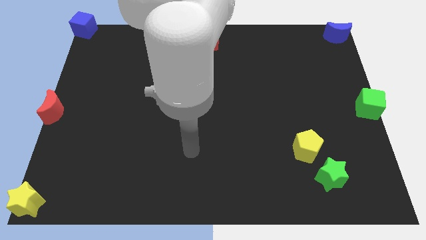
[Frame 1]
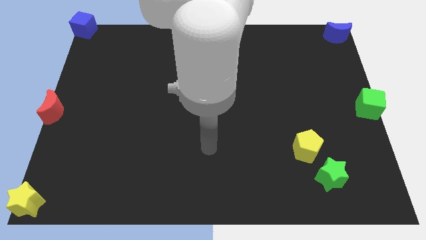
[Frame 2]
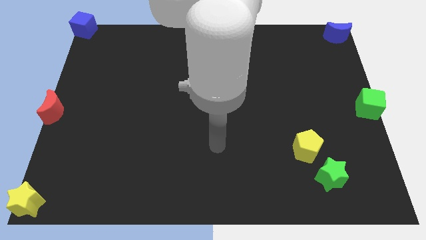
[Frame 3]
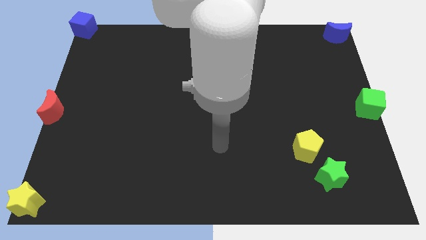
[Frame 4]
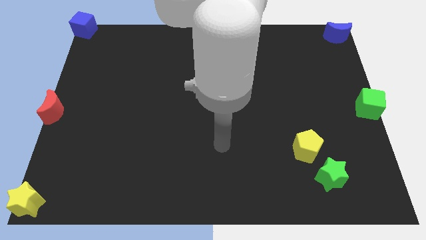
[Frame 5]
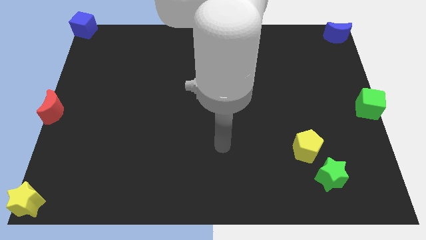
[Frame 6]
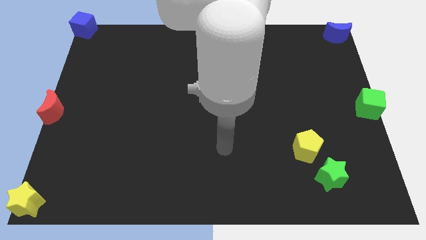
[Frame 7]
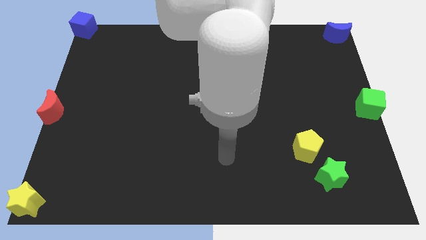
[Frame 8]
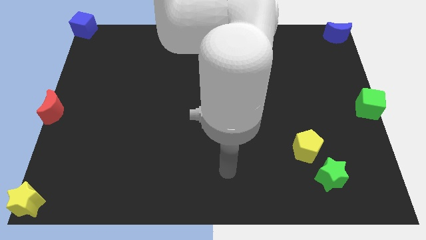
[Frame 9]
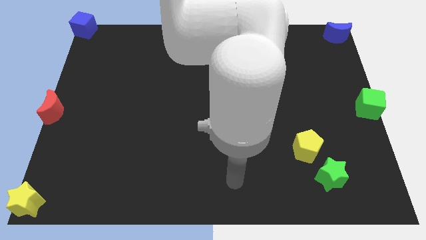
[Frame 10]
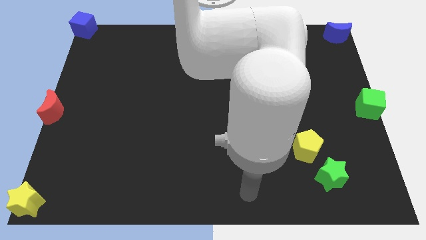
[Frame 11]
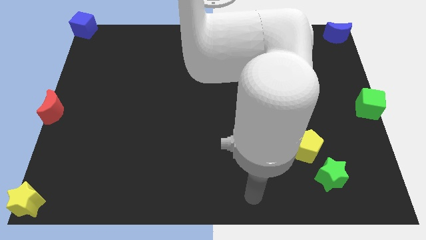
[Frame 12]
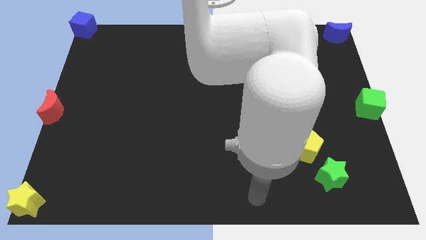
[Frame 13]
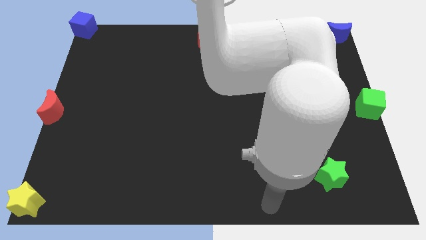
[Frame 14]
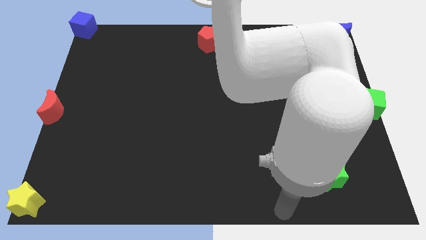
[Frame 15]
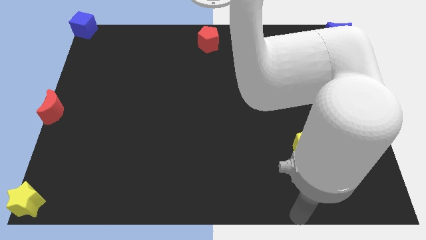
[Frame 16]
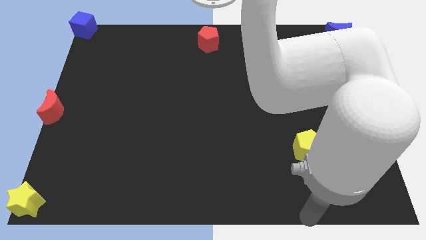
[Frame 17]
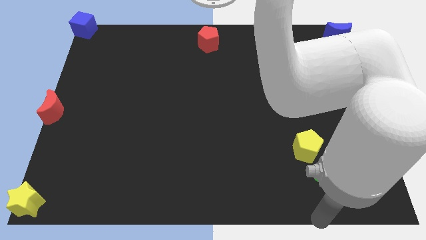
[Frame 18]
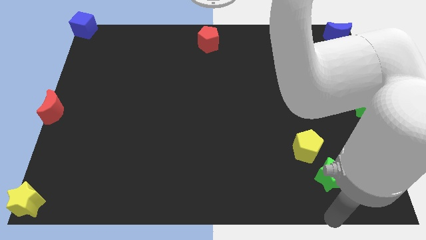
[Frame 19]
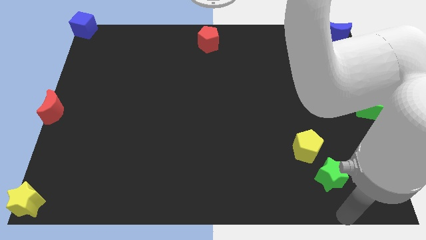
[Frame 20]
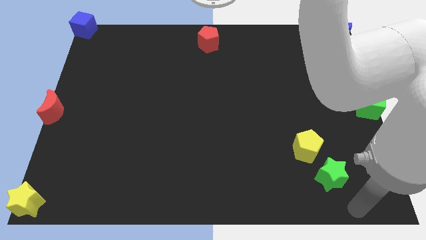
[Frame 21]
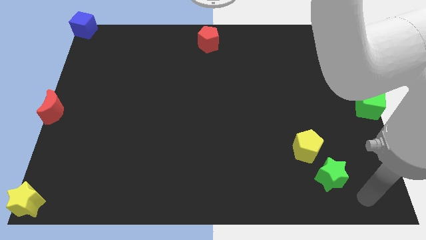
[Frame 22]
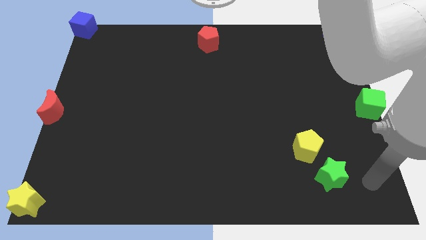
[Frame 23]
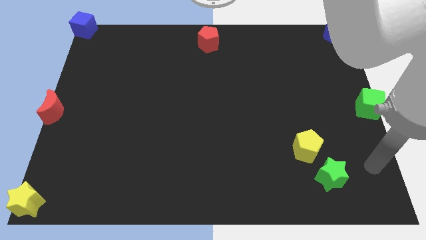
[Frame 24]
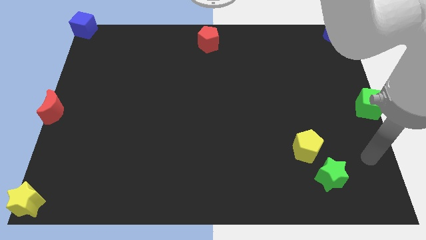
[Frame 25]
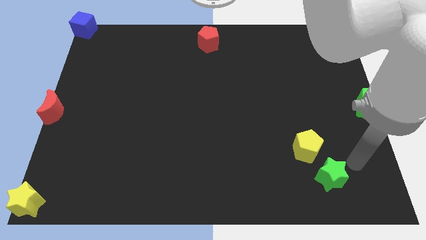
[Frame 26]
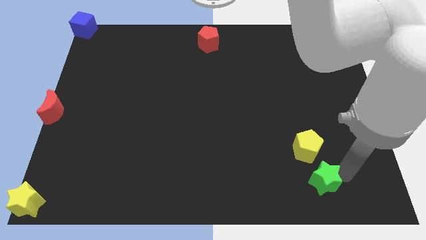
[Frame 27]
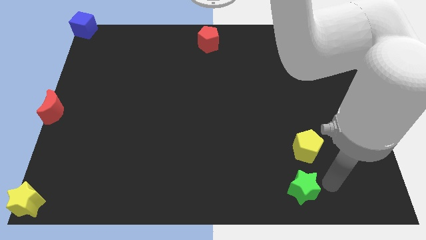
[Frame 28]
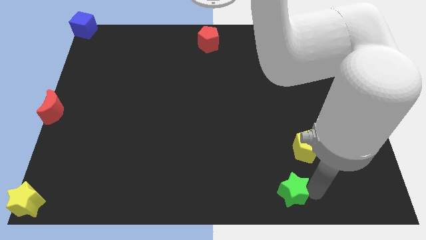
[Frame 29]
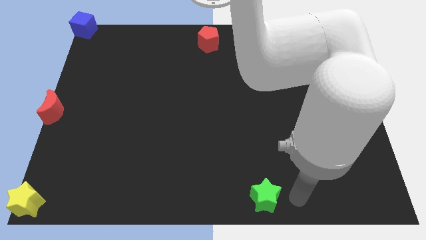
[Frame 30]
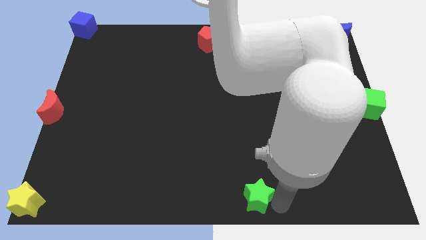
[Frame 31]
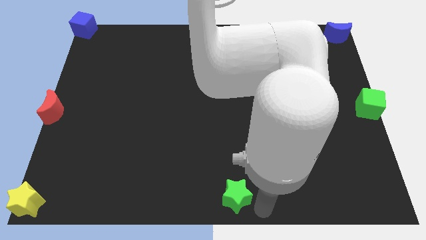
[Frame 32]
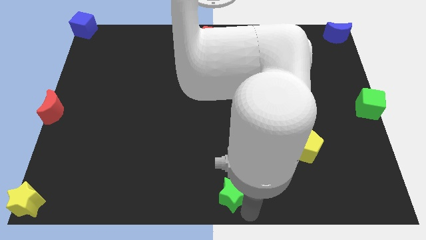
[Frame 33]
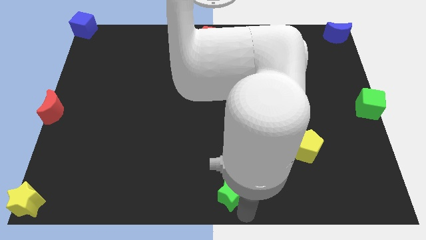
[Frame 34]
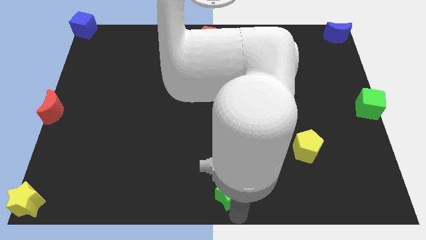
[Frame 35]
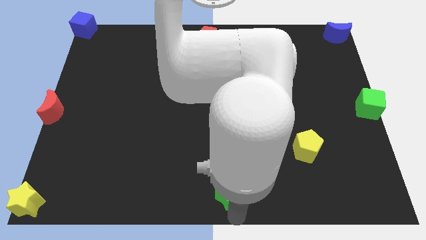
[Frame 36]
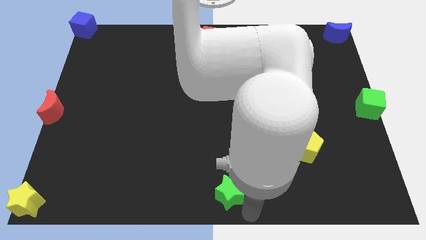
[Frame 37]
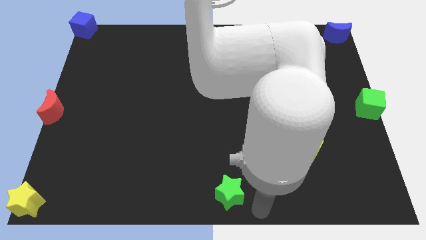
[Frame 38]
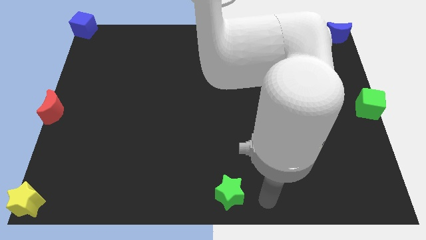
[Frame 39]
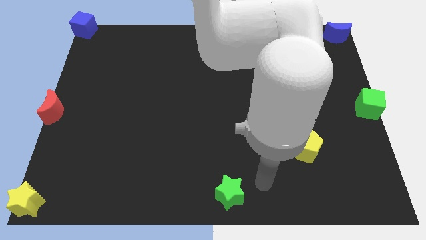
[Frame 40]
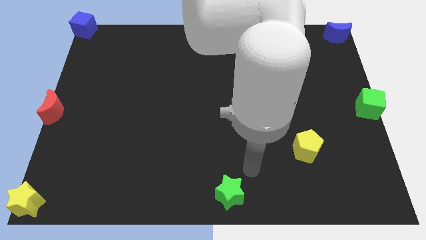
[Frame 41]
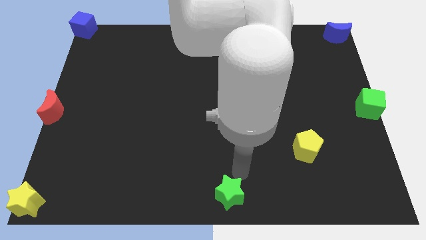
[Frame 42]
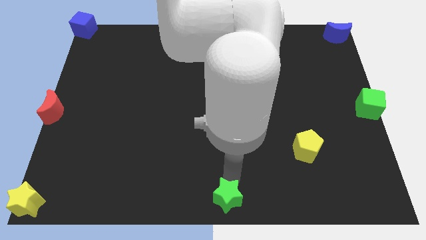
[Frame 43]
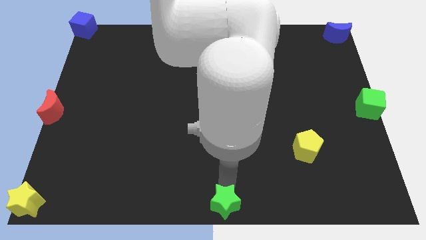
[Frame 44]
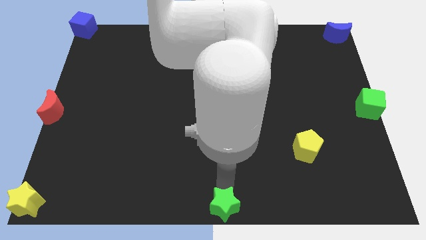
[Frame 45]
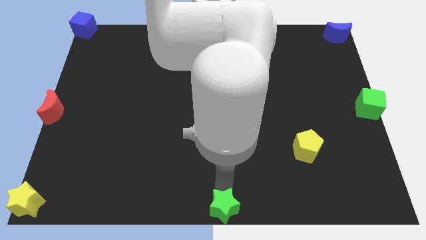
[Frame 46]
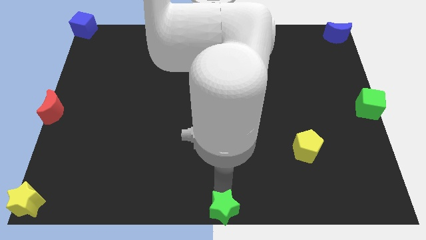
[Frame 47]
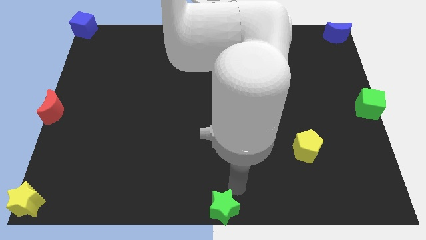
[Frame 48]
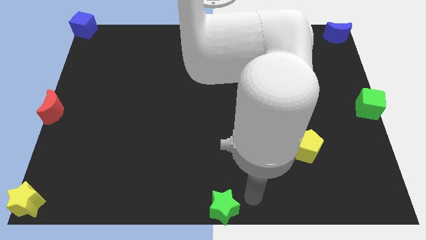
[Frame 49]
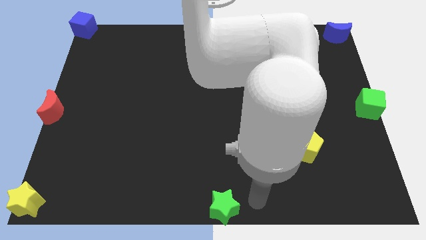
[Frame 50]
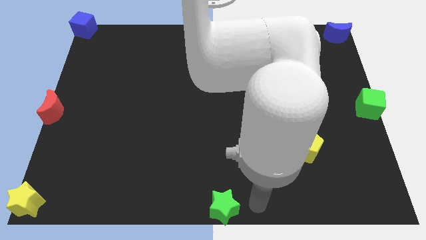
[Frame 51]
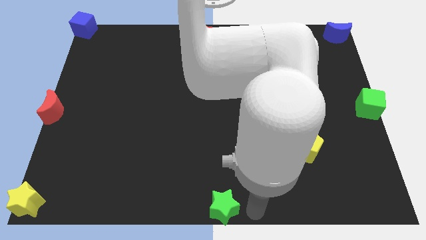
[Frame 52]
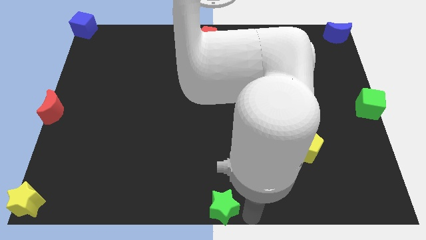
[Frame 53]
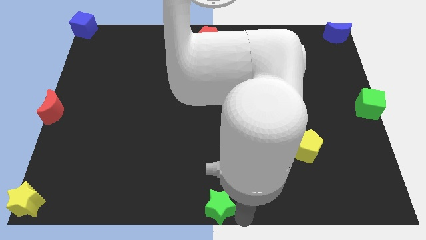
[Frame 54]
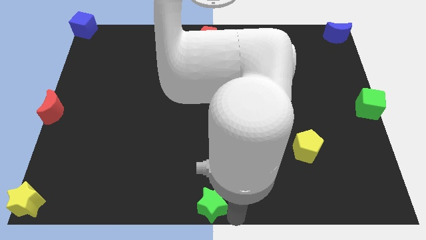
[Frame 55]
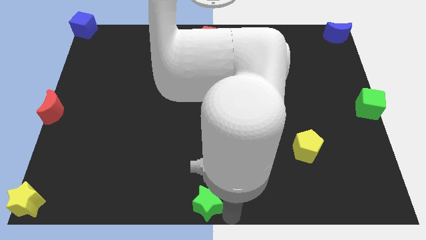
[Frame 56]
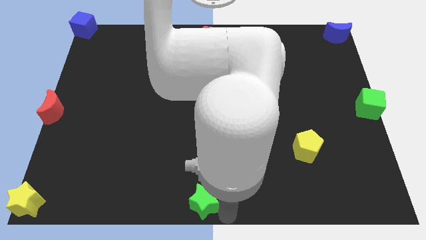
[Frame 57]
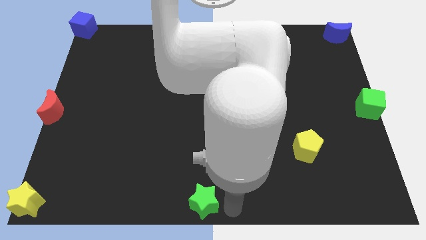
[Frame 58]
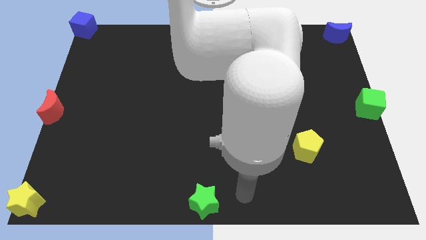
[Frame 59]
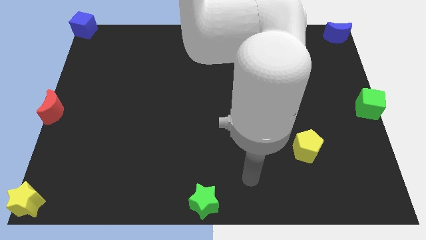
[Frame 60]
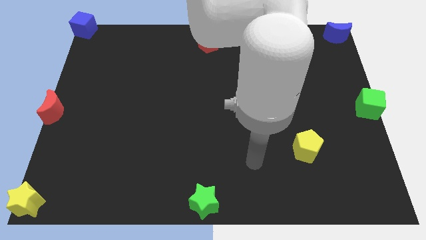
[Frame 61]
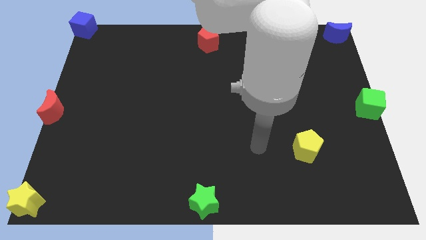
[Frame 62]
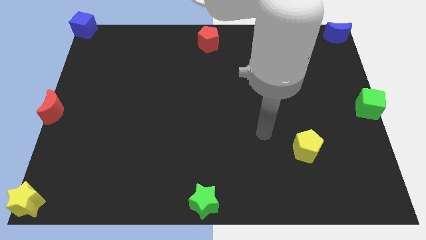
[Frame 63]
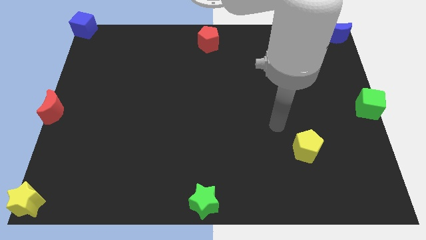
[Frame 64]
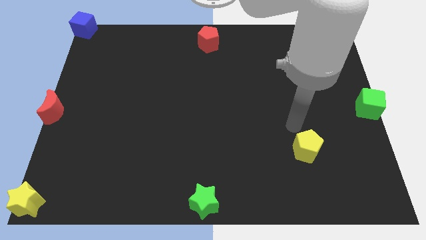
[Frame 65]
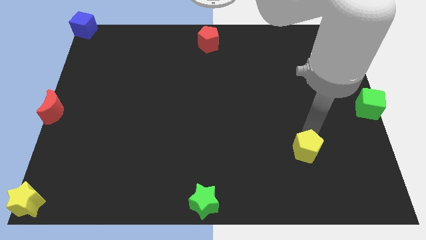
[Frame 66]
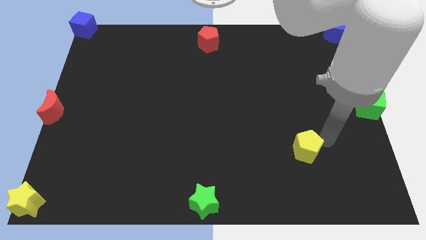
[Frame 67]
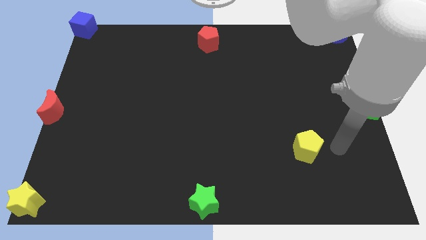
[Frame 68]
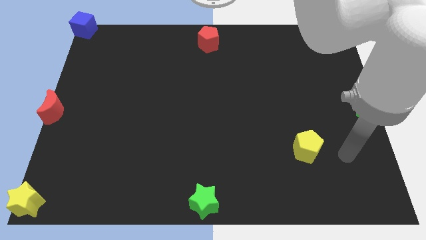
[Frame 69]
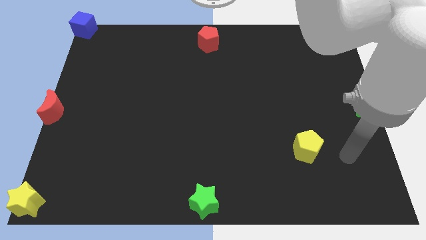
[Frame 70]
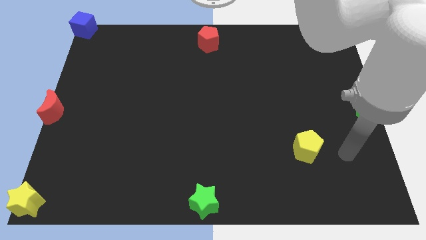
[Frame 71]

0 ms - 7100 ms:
move the green star bottom center of the board

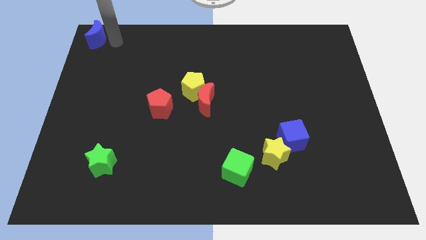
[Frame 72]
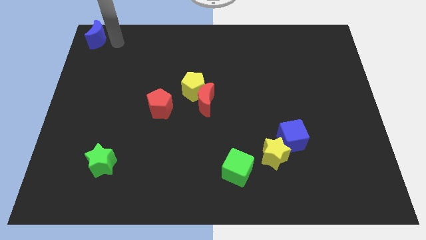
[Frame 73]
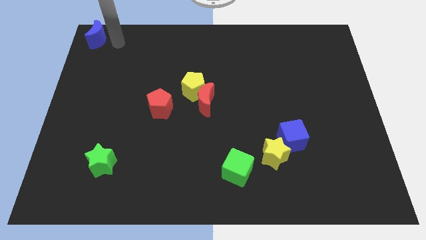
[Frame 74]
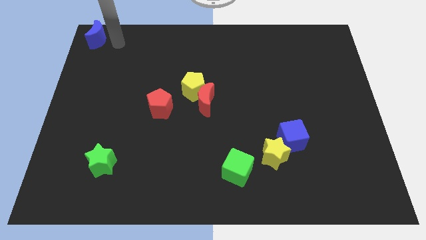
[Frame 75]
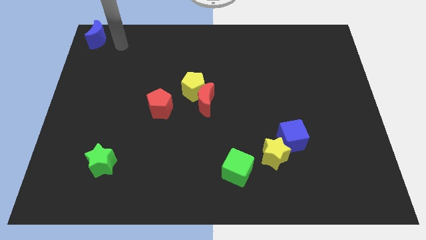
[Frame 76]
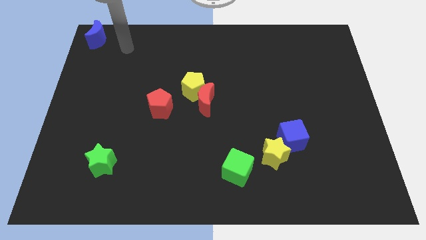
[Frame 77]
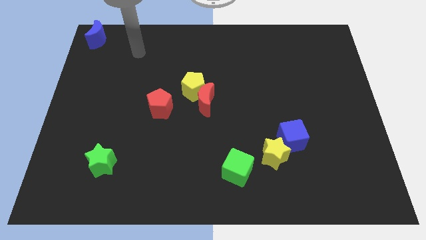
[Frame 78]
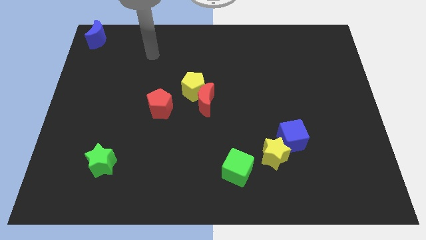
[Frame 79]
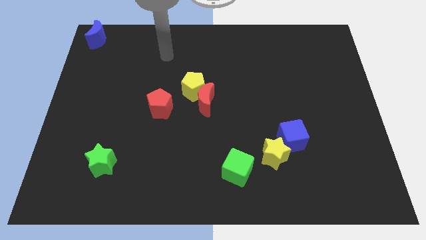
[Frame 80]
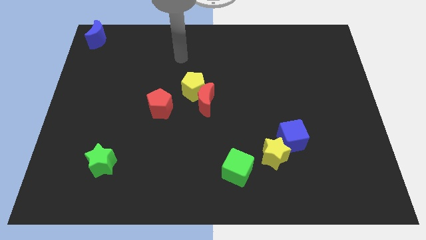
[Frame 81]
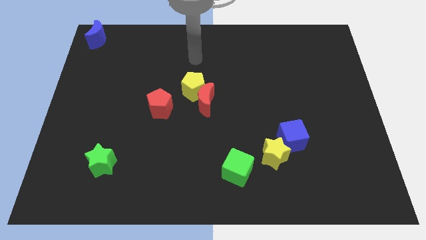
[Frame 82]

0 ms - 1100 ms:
slide the arm away from the blue moon

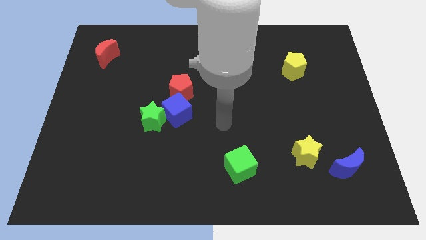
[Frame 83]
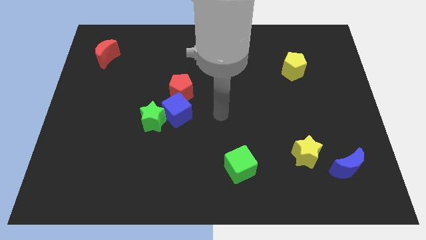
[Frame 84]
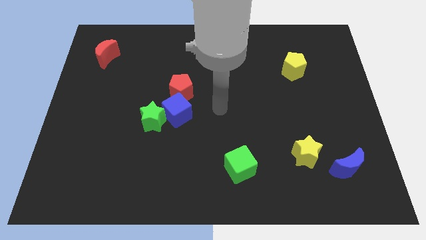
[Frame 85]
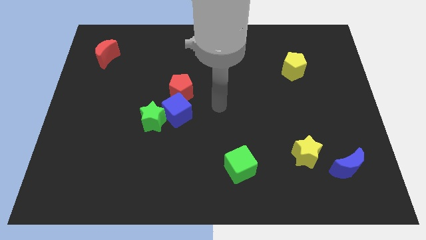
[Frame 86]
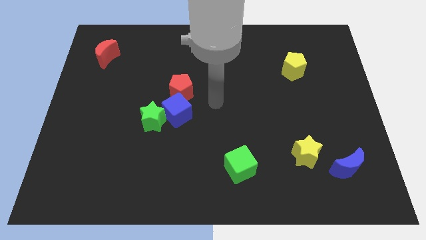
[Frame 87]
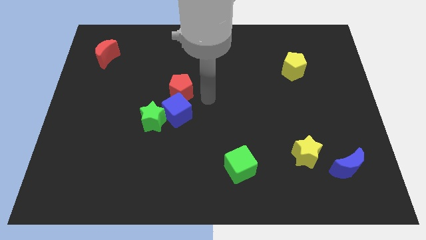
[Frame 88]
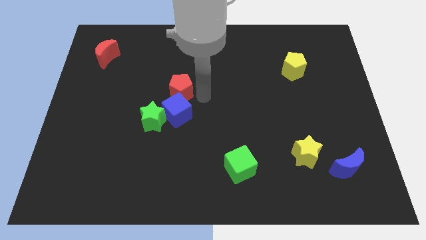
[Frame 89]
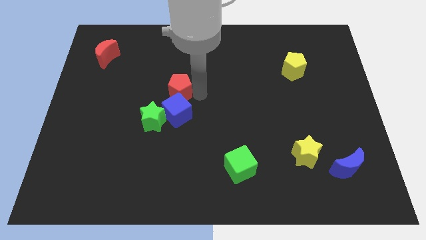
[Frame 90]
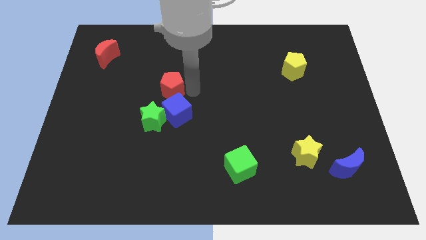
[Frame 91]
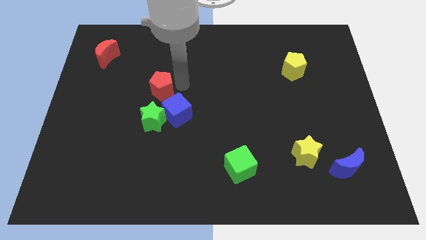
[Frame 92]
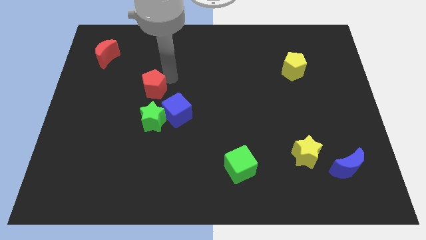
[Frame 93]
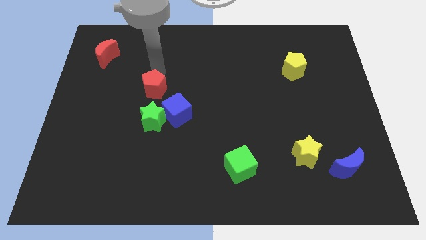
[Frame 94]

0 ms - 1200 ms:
place the red pentagon above the green star
